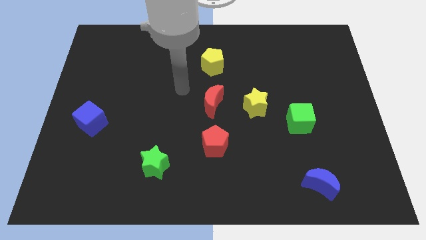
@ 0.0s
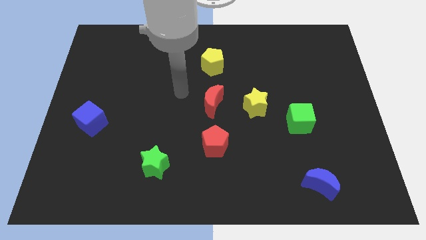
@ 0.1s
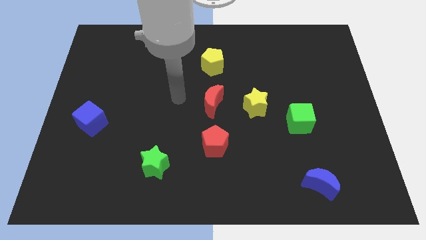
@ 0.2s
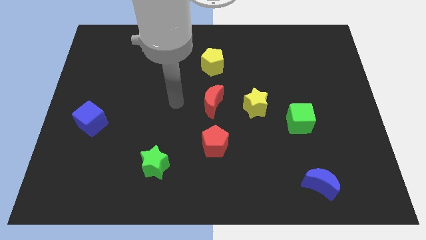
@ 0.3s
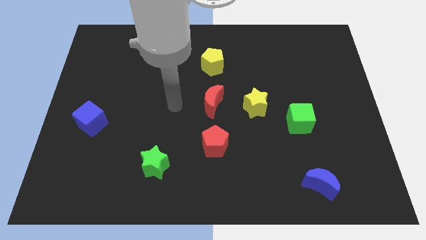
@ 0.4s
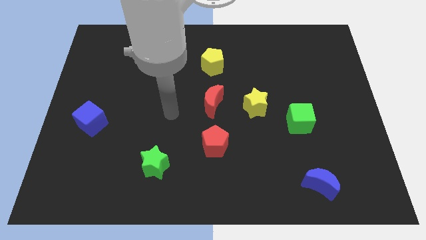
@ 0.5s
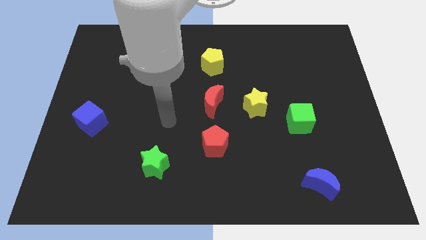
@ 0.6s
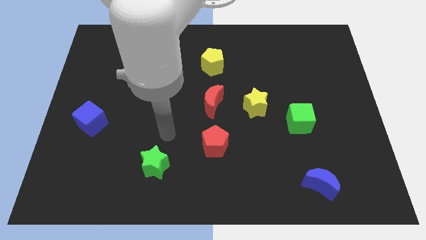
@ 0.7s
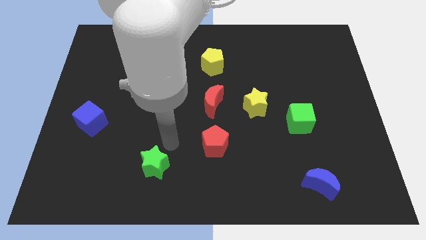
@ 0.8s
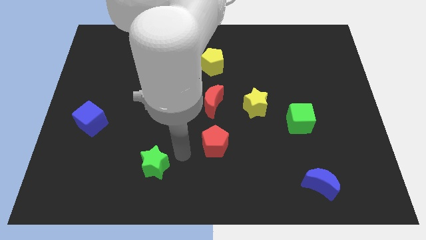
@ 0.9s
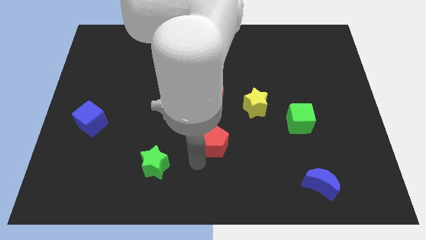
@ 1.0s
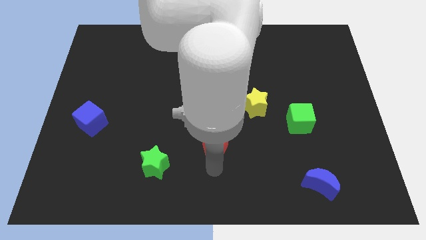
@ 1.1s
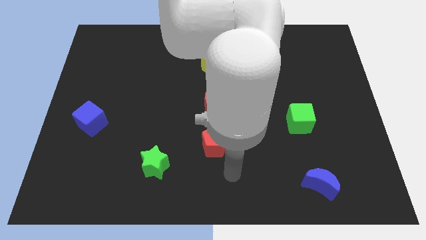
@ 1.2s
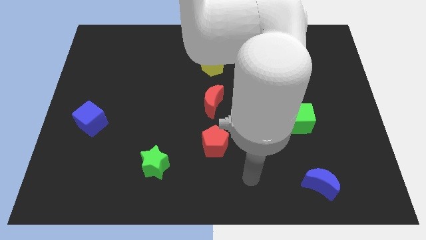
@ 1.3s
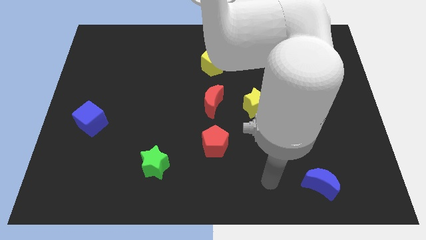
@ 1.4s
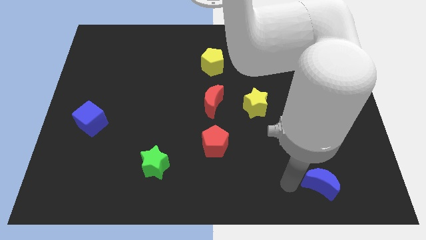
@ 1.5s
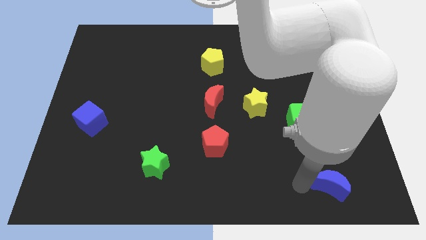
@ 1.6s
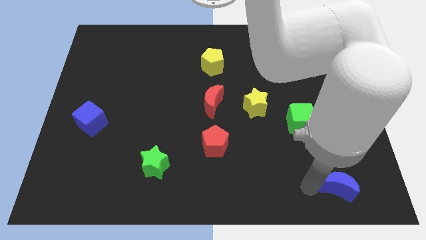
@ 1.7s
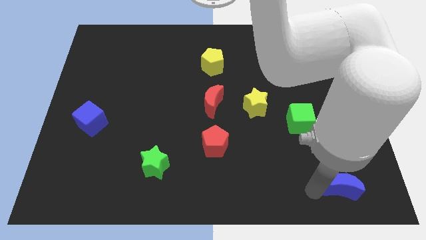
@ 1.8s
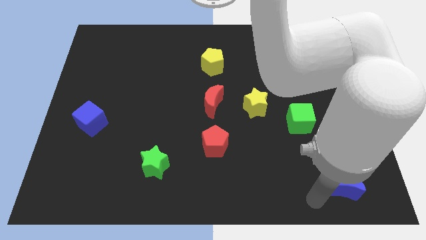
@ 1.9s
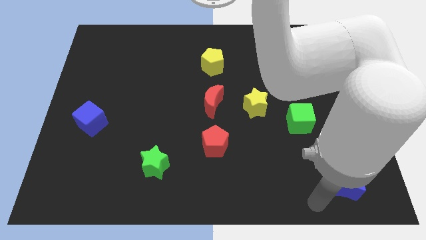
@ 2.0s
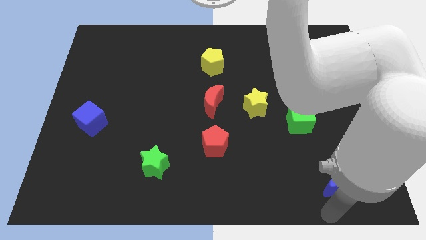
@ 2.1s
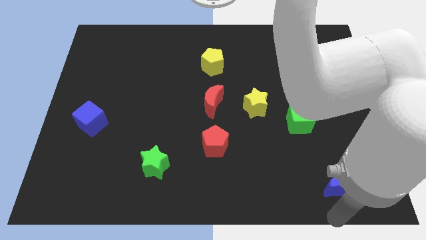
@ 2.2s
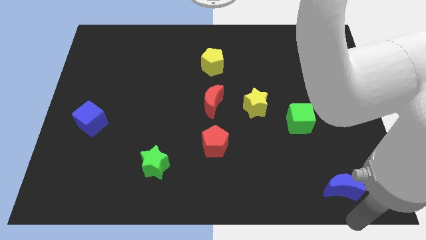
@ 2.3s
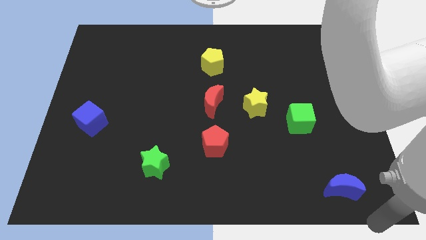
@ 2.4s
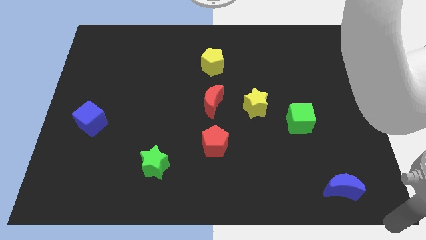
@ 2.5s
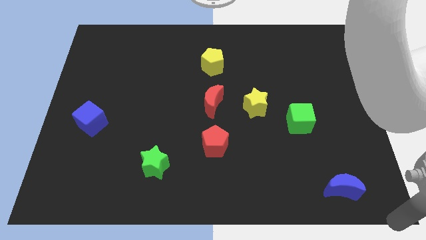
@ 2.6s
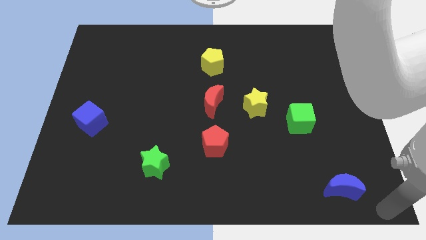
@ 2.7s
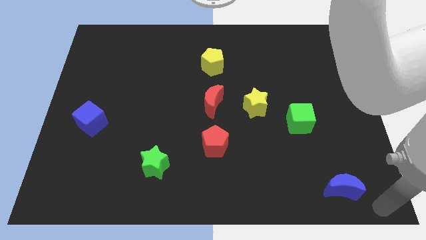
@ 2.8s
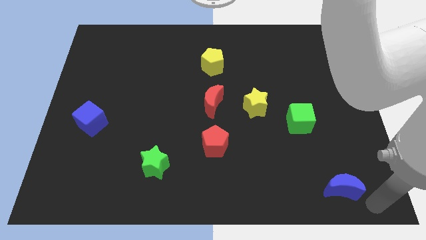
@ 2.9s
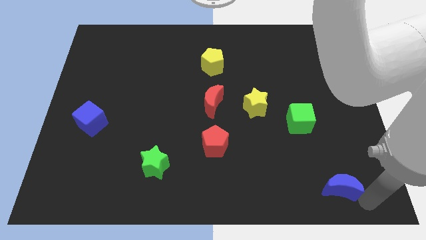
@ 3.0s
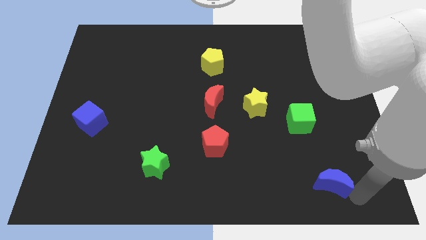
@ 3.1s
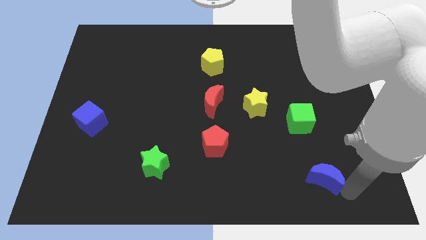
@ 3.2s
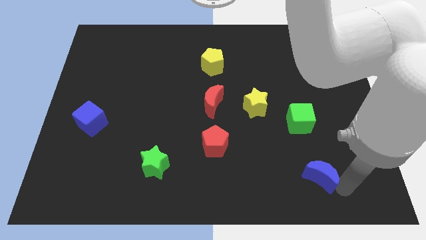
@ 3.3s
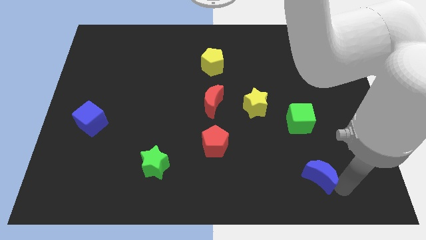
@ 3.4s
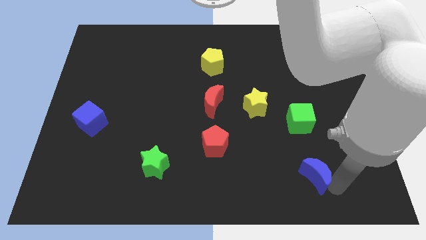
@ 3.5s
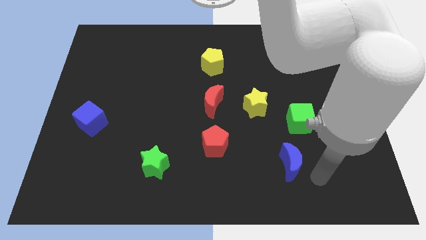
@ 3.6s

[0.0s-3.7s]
drag the blue crescent diagonally on the bottom left side of the green cube

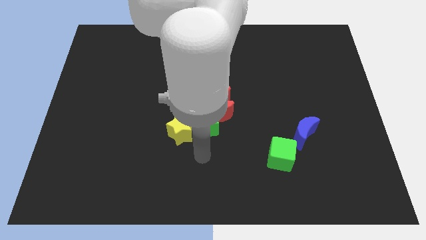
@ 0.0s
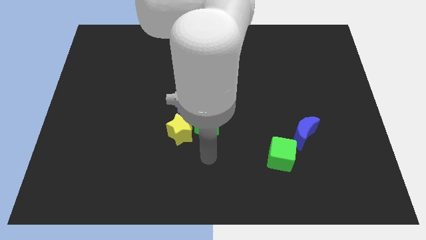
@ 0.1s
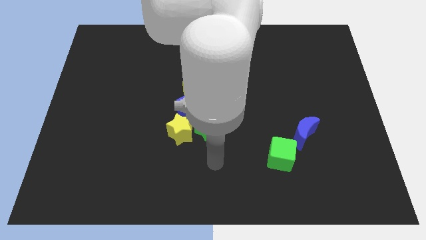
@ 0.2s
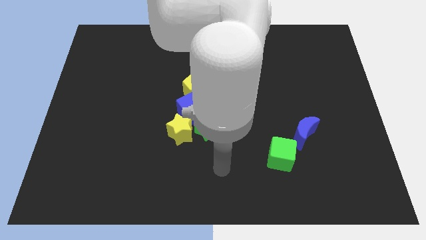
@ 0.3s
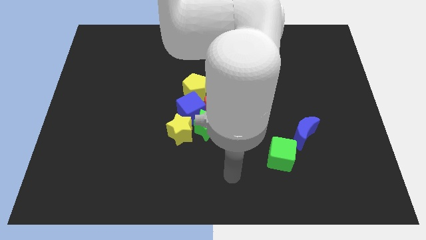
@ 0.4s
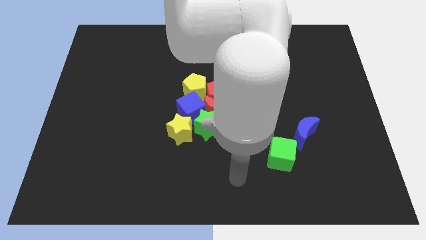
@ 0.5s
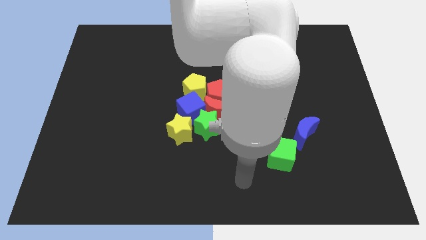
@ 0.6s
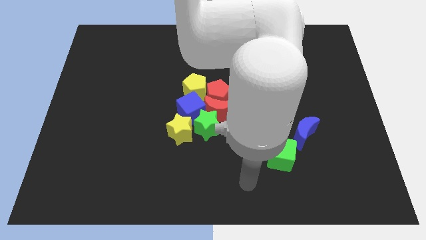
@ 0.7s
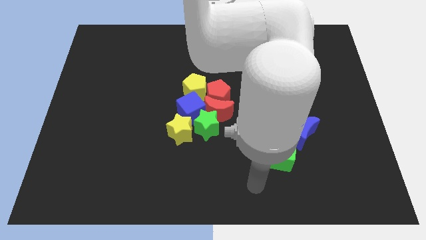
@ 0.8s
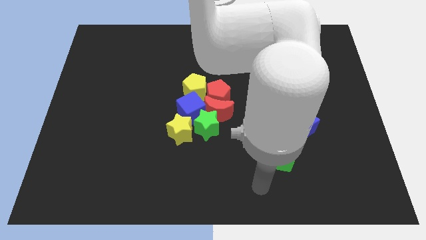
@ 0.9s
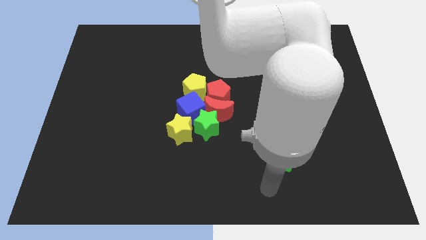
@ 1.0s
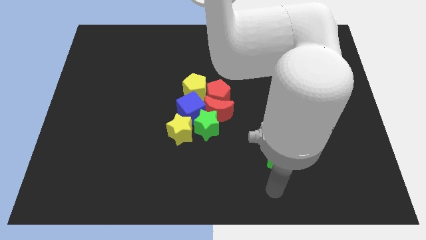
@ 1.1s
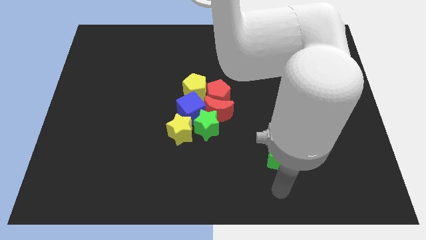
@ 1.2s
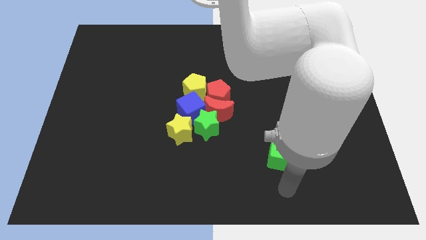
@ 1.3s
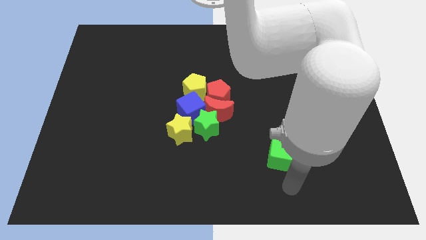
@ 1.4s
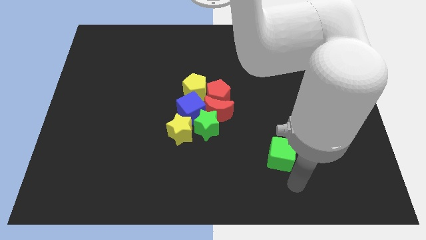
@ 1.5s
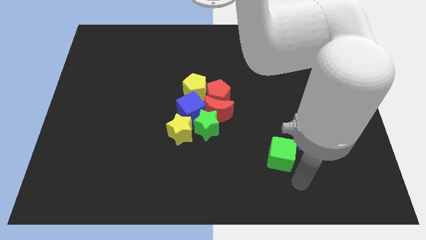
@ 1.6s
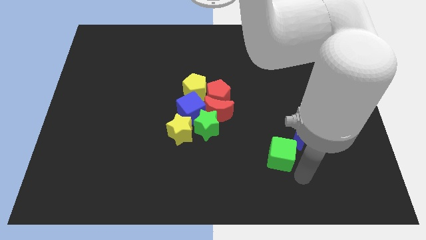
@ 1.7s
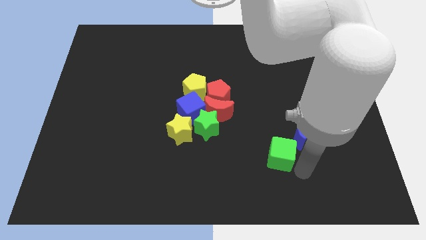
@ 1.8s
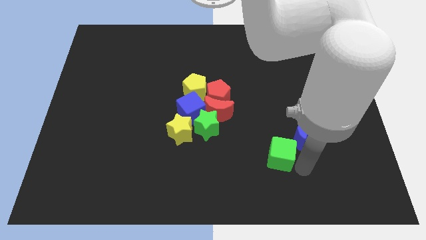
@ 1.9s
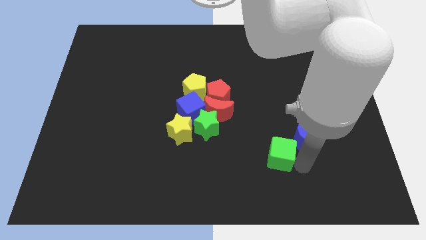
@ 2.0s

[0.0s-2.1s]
point your arm right to green cube

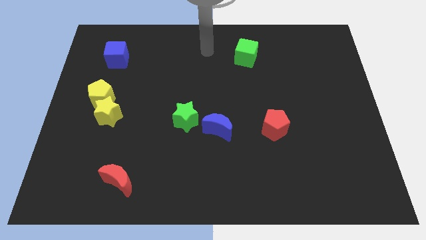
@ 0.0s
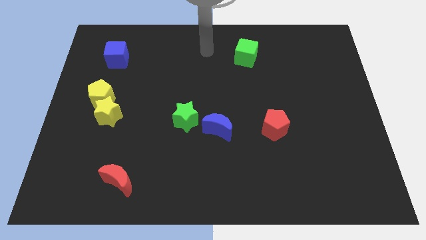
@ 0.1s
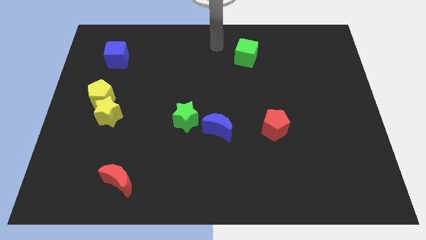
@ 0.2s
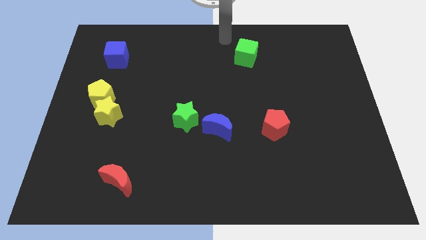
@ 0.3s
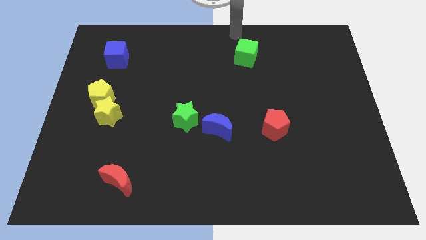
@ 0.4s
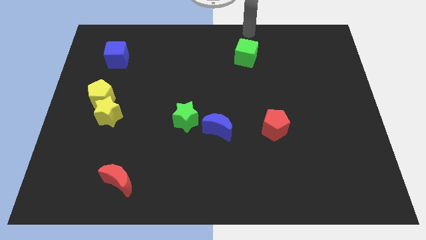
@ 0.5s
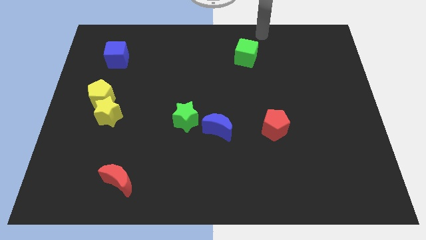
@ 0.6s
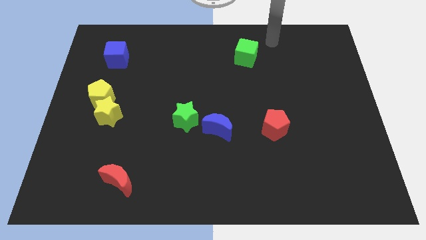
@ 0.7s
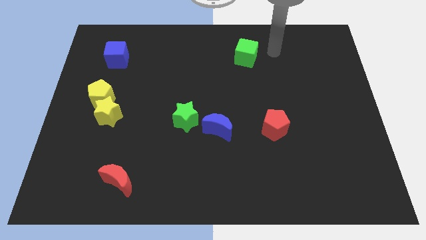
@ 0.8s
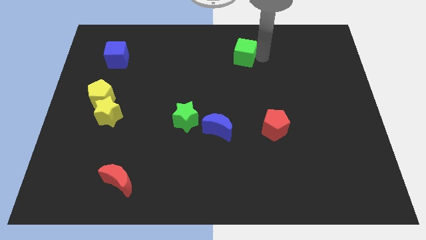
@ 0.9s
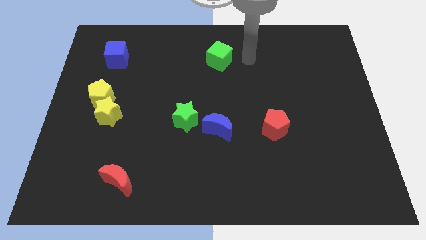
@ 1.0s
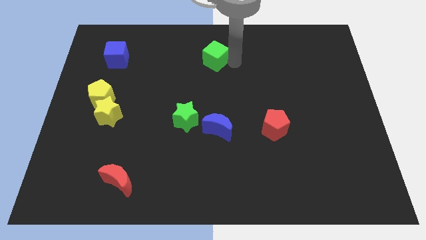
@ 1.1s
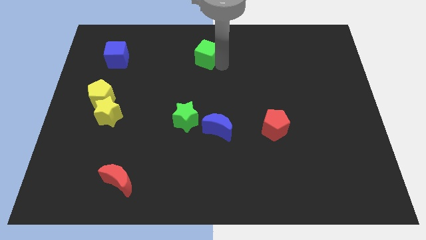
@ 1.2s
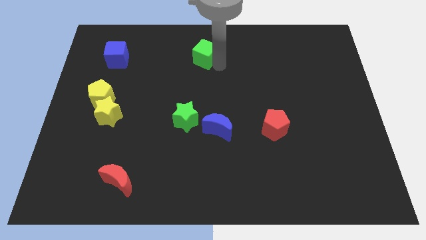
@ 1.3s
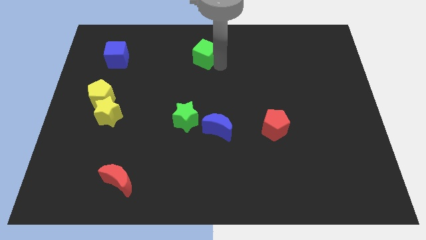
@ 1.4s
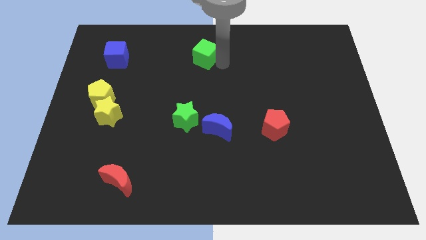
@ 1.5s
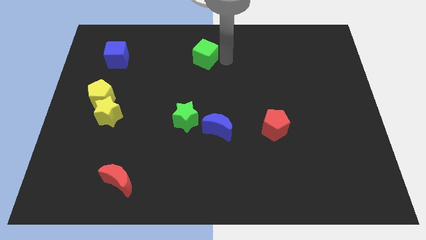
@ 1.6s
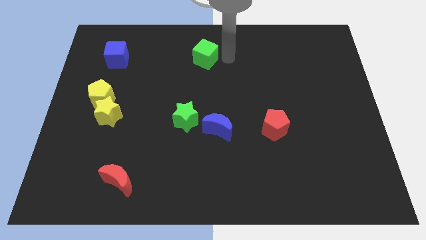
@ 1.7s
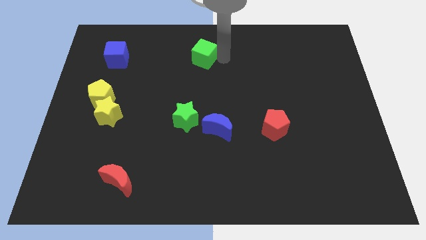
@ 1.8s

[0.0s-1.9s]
move the green cube top center of the board

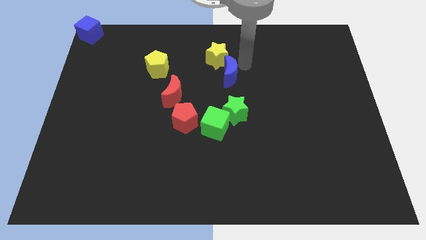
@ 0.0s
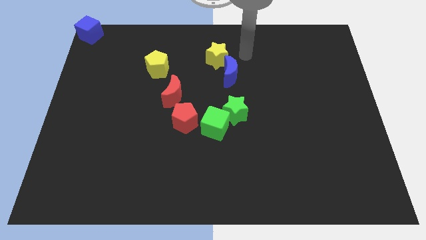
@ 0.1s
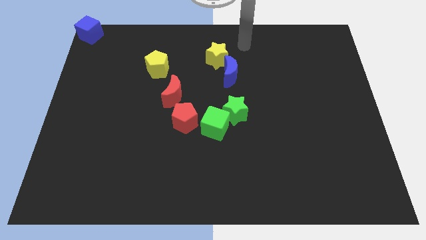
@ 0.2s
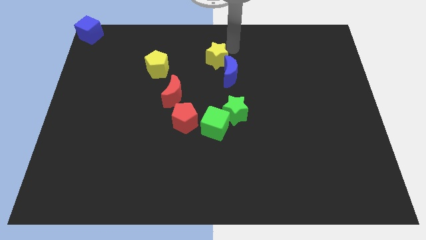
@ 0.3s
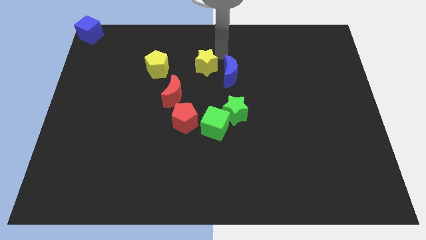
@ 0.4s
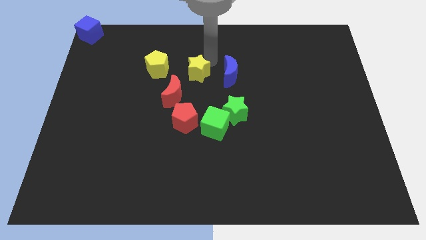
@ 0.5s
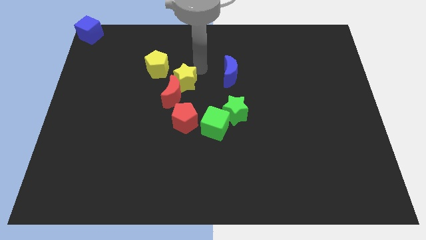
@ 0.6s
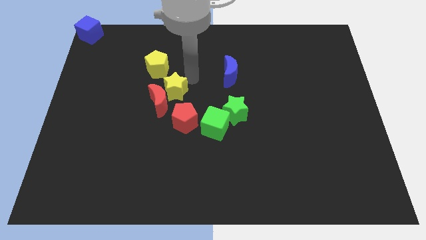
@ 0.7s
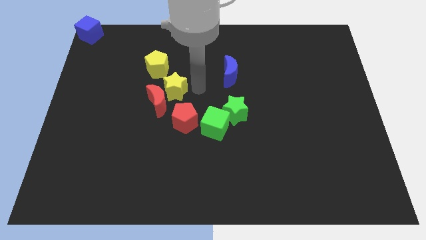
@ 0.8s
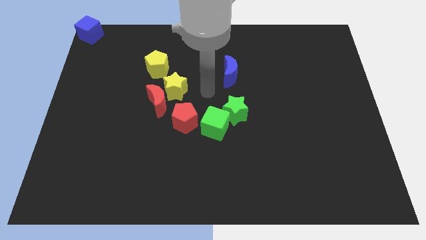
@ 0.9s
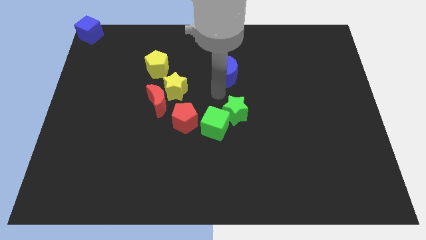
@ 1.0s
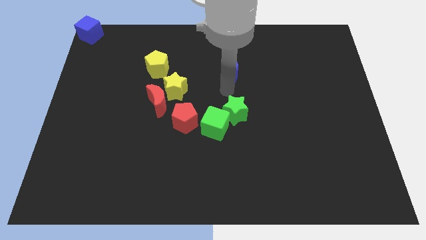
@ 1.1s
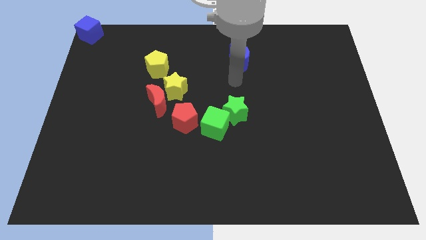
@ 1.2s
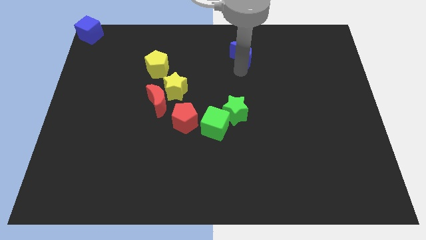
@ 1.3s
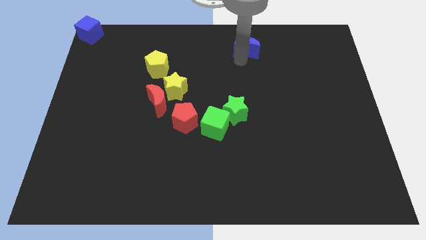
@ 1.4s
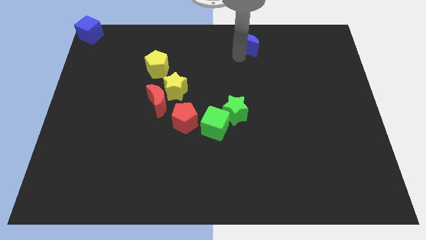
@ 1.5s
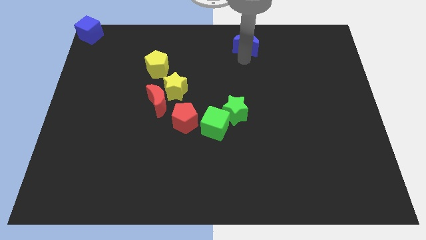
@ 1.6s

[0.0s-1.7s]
push the yellow star into the red moon
